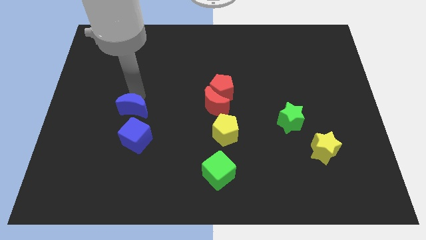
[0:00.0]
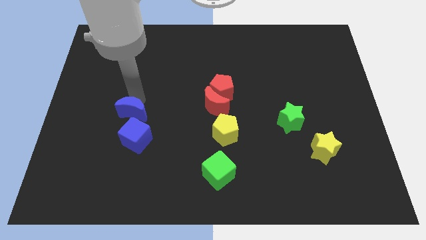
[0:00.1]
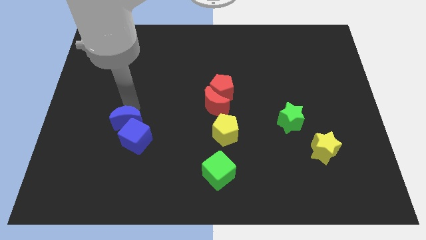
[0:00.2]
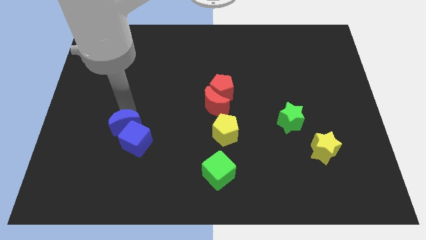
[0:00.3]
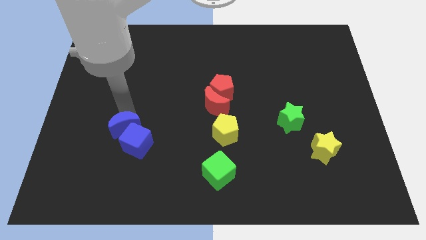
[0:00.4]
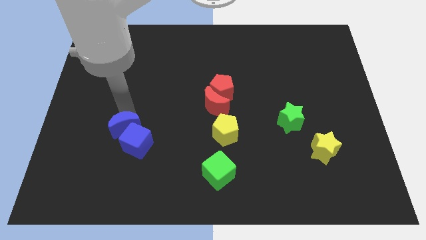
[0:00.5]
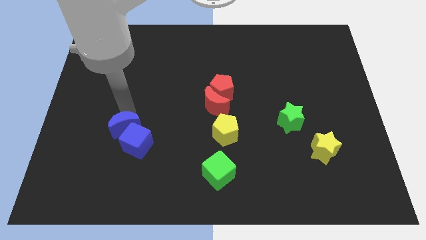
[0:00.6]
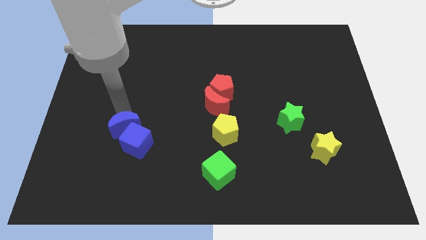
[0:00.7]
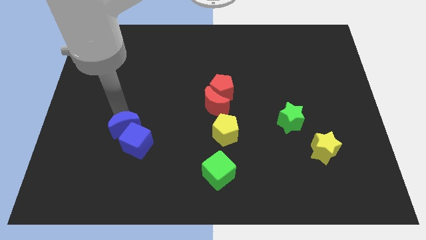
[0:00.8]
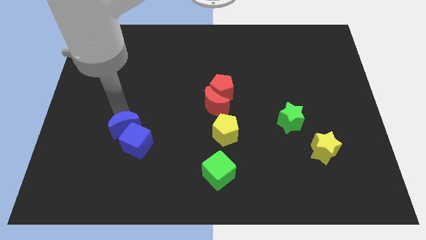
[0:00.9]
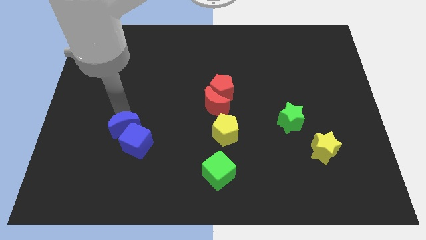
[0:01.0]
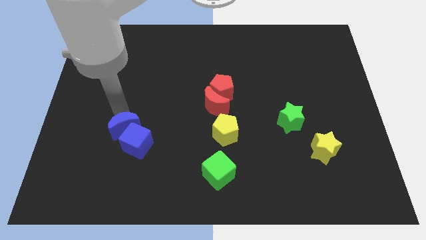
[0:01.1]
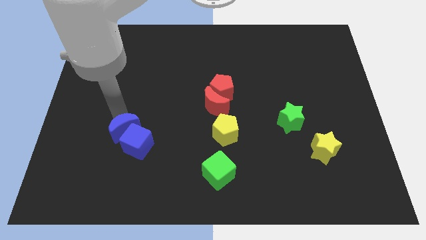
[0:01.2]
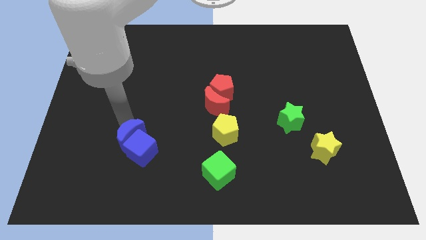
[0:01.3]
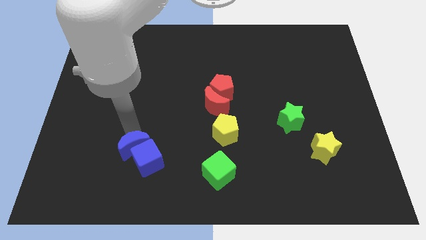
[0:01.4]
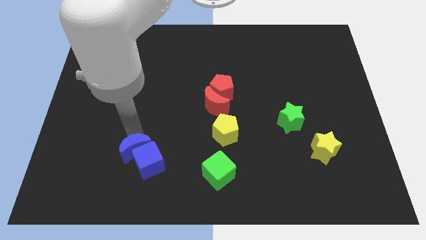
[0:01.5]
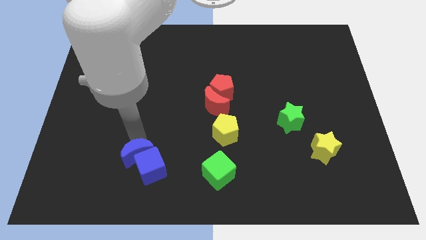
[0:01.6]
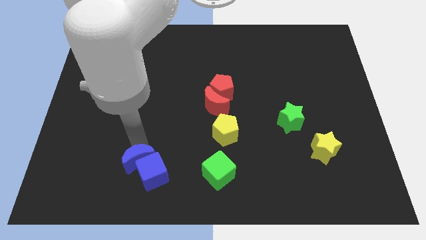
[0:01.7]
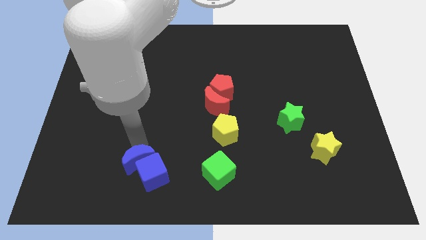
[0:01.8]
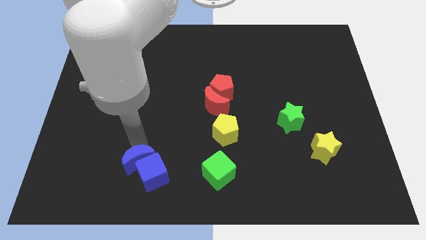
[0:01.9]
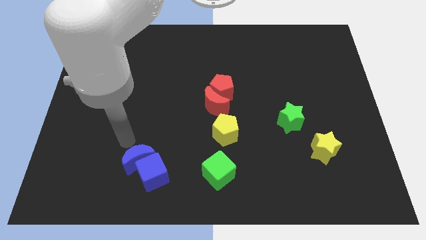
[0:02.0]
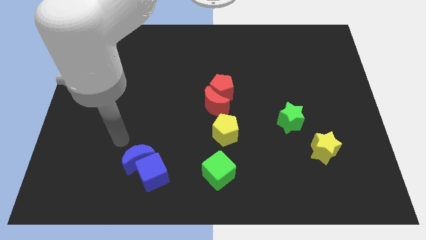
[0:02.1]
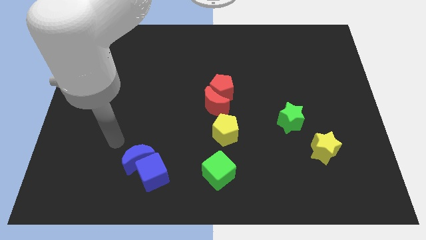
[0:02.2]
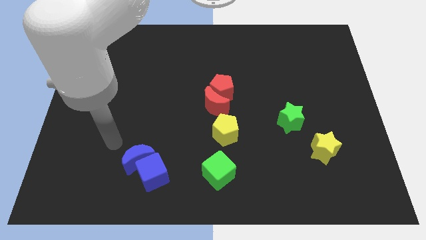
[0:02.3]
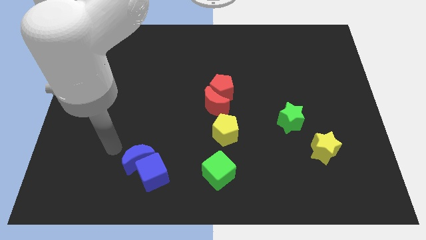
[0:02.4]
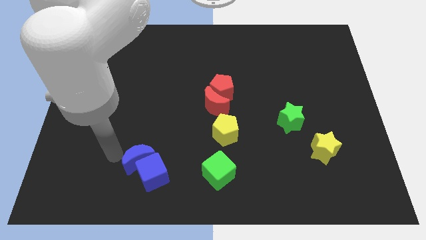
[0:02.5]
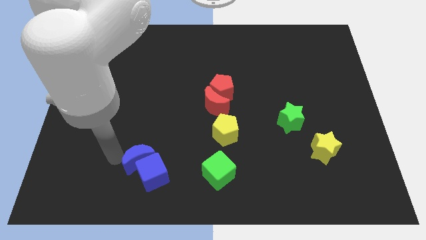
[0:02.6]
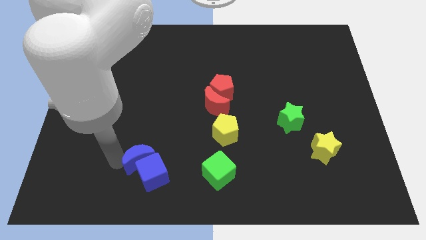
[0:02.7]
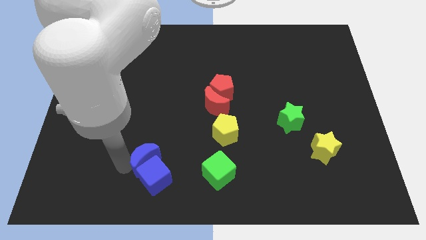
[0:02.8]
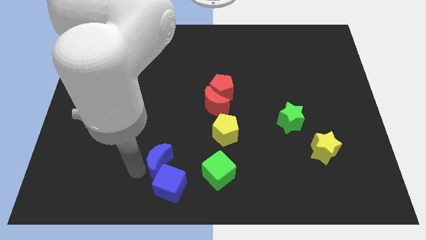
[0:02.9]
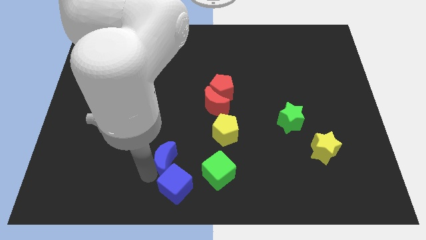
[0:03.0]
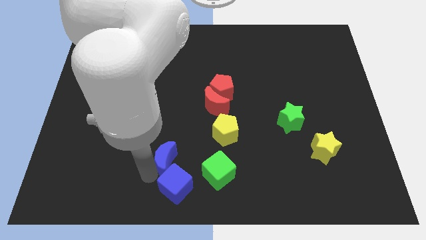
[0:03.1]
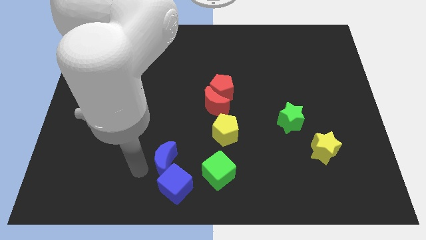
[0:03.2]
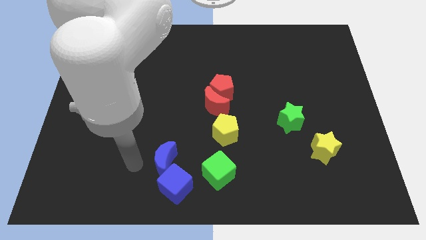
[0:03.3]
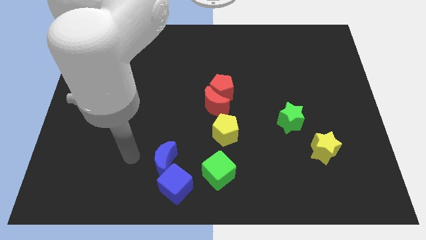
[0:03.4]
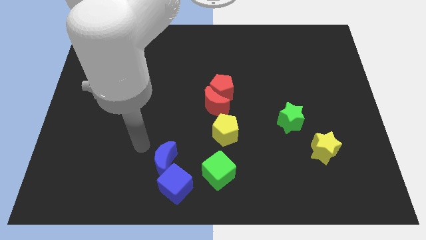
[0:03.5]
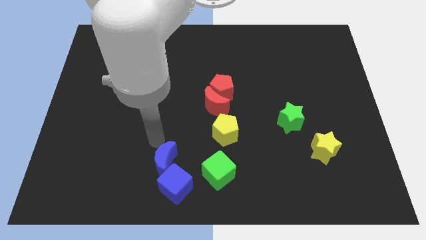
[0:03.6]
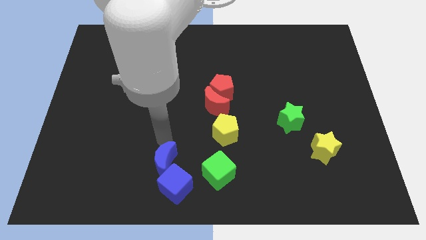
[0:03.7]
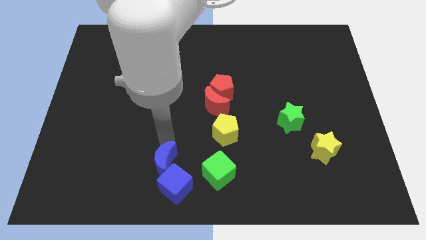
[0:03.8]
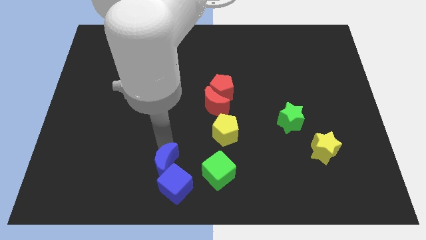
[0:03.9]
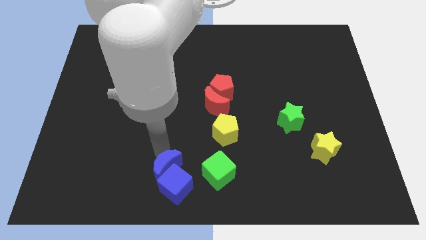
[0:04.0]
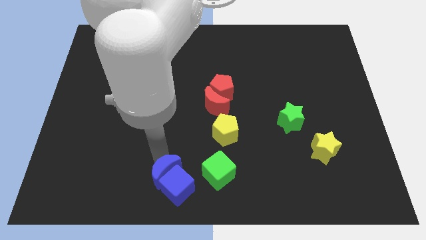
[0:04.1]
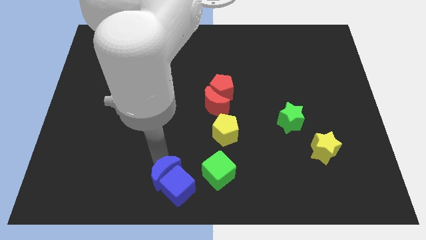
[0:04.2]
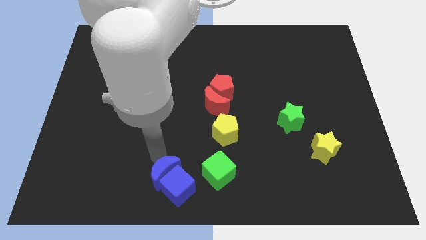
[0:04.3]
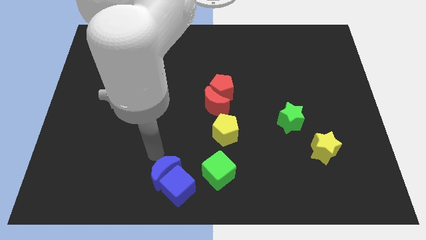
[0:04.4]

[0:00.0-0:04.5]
move the blue crescent along with blue cube to the left of the green cube

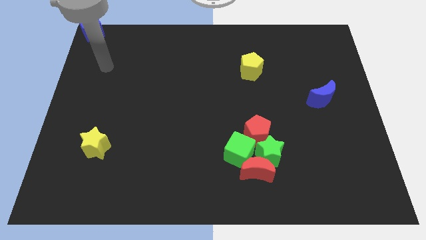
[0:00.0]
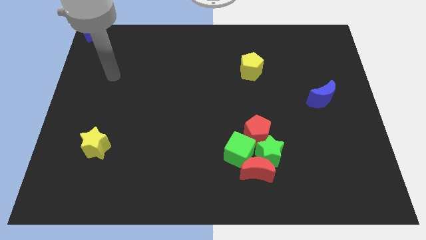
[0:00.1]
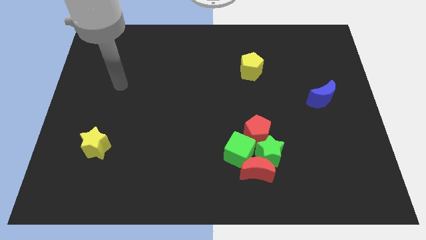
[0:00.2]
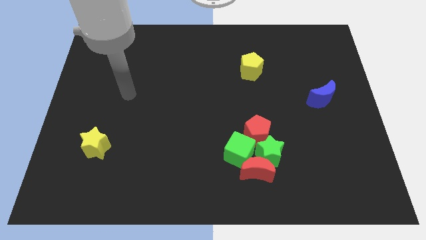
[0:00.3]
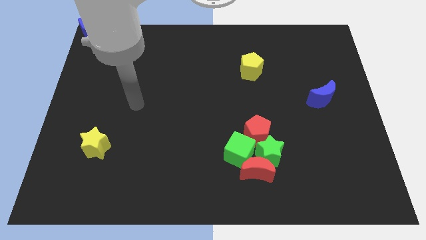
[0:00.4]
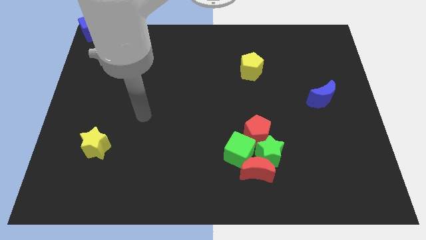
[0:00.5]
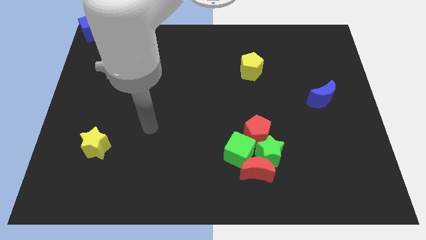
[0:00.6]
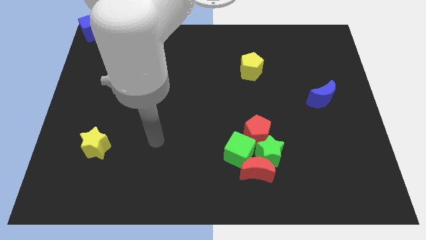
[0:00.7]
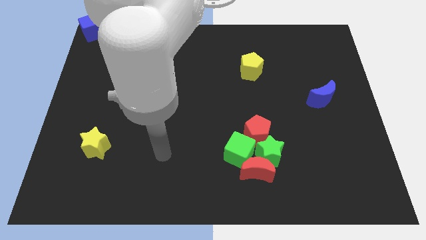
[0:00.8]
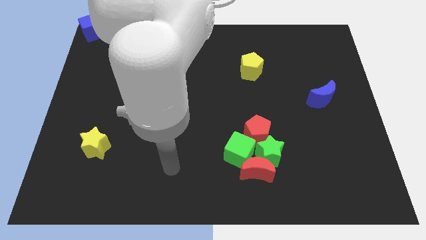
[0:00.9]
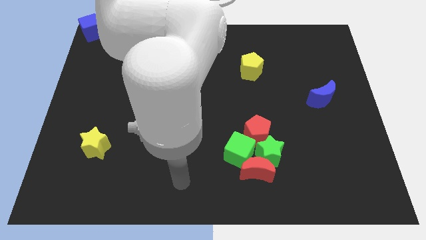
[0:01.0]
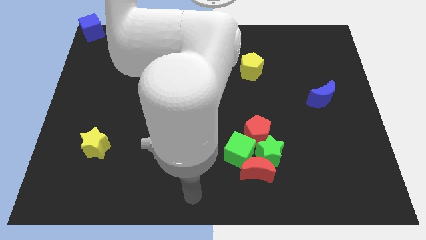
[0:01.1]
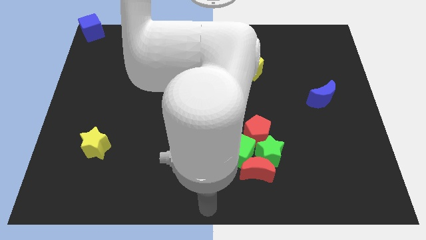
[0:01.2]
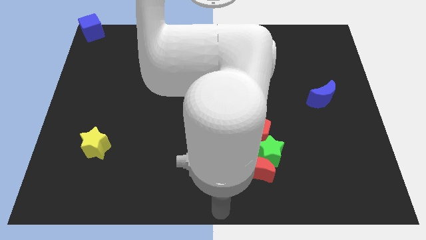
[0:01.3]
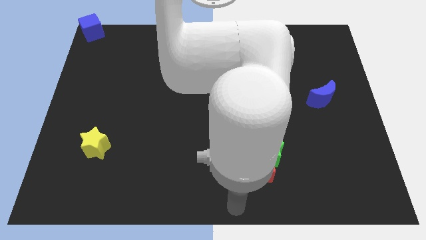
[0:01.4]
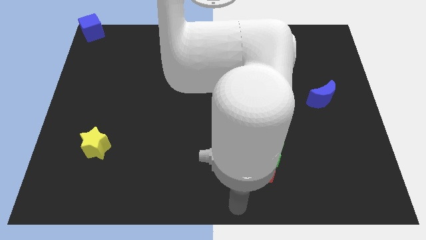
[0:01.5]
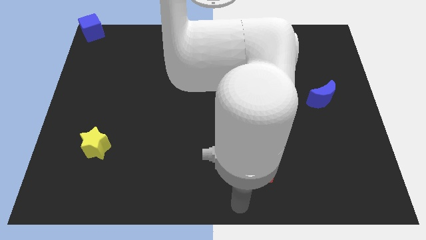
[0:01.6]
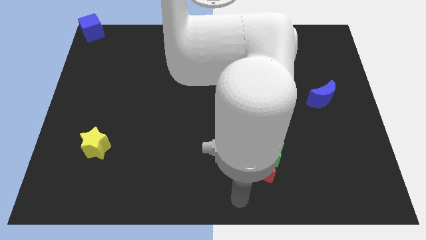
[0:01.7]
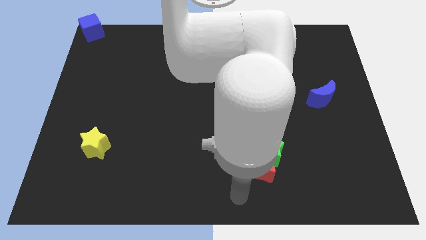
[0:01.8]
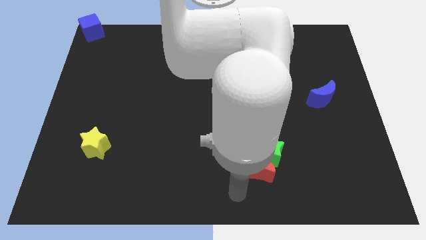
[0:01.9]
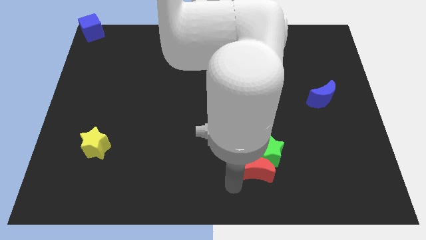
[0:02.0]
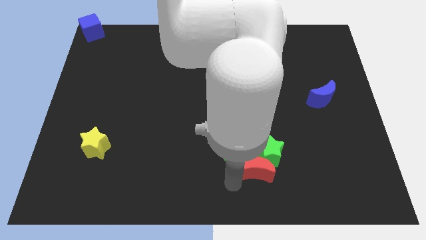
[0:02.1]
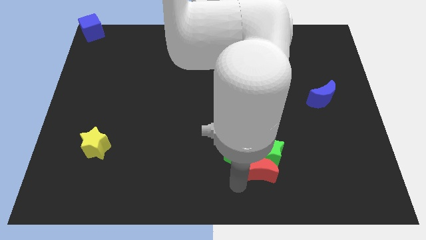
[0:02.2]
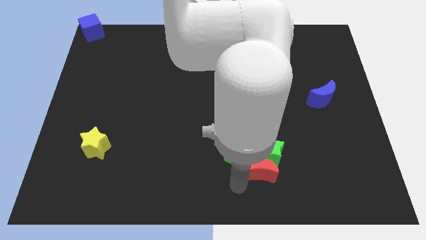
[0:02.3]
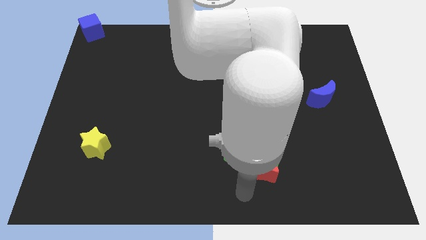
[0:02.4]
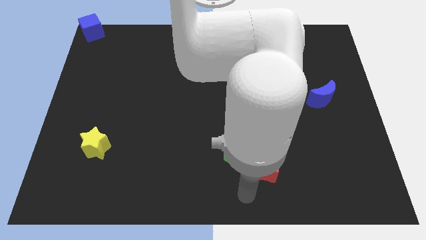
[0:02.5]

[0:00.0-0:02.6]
move the arm away from the blue cube

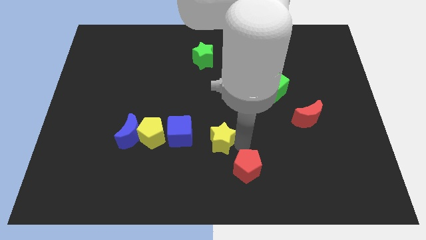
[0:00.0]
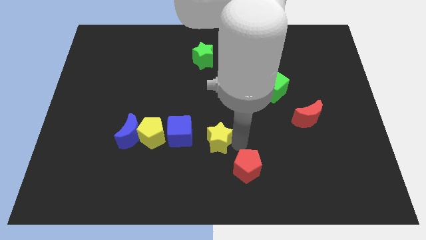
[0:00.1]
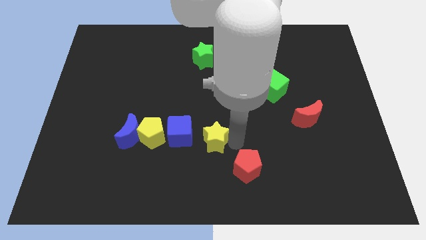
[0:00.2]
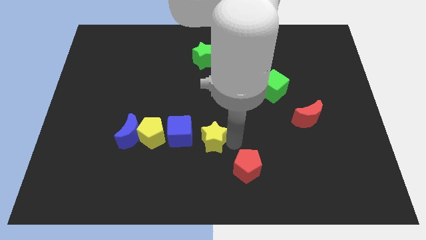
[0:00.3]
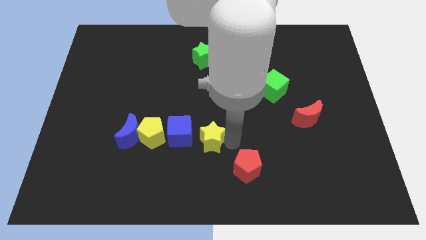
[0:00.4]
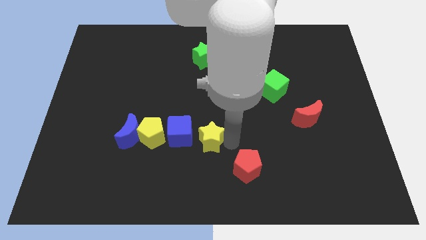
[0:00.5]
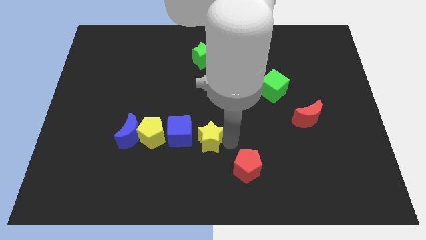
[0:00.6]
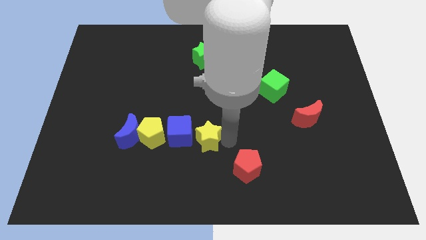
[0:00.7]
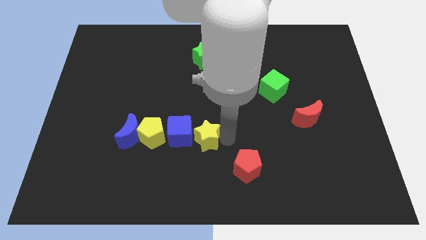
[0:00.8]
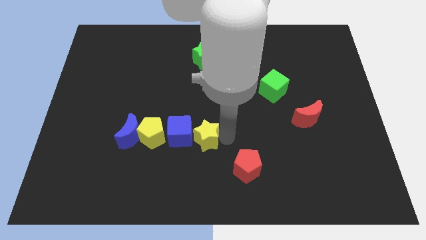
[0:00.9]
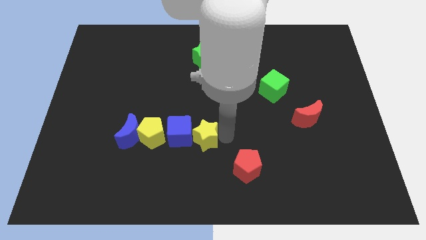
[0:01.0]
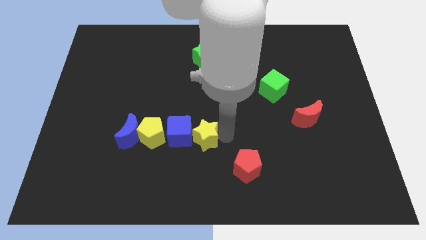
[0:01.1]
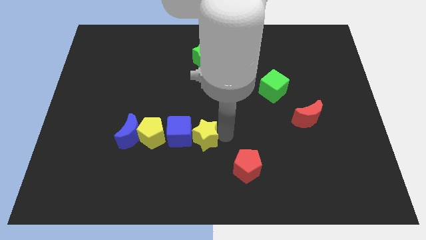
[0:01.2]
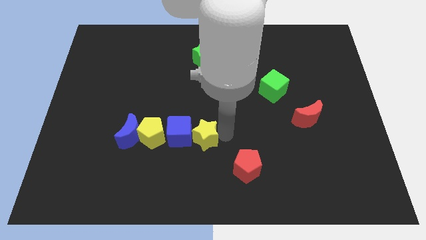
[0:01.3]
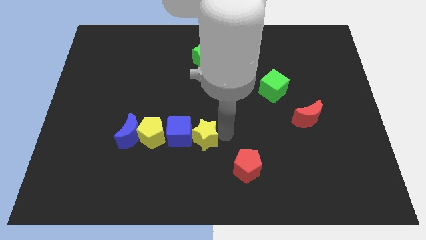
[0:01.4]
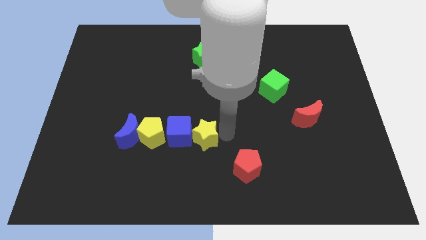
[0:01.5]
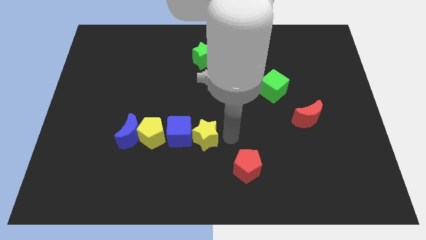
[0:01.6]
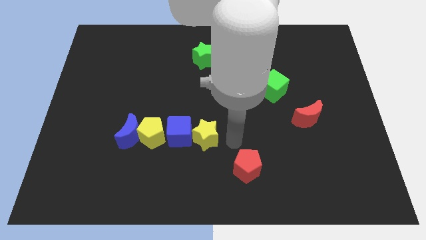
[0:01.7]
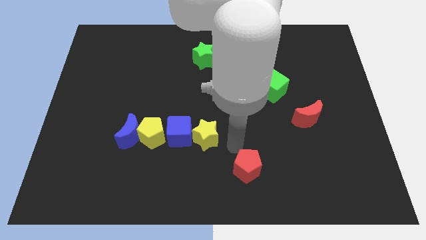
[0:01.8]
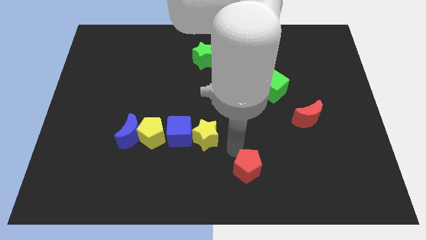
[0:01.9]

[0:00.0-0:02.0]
move the yellow star into the blue cube from the right
